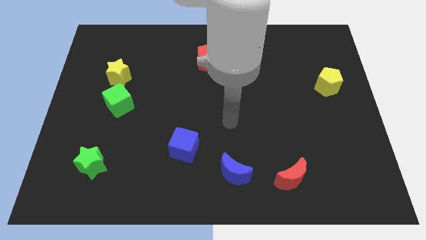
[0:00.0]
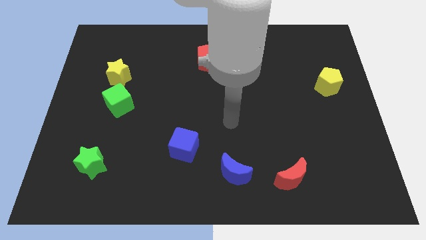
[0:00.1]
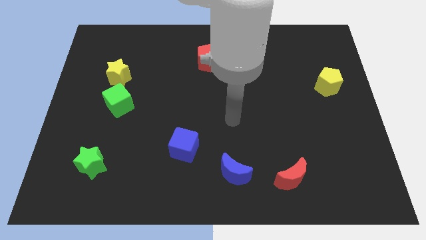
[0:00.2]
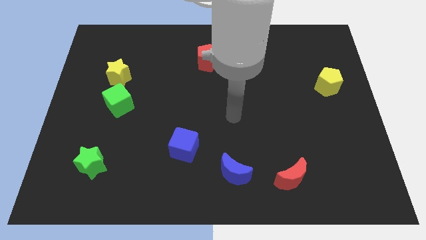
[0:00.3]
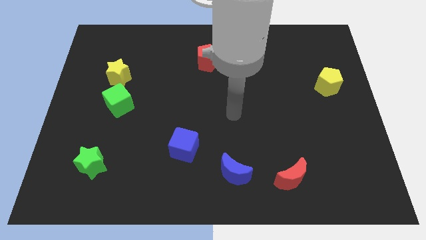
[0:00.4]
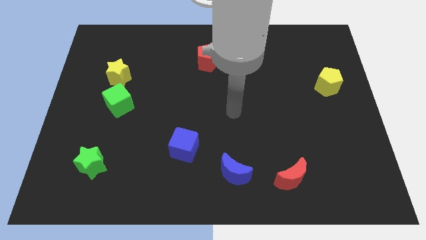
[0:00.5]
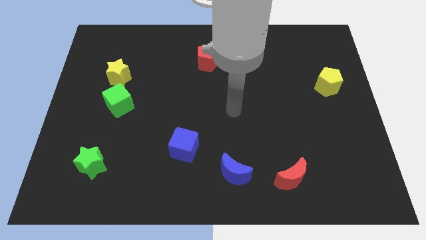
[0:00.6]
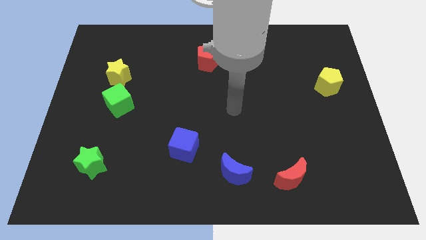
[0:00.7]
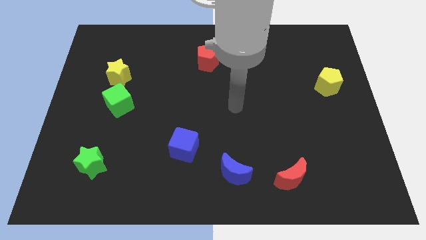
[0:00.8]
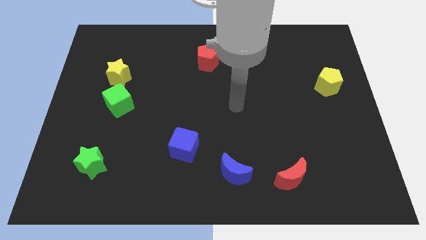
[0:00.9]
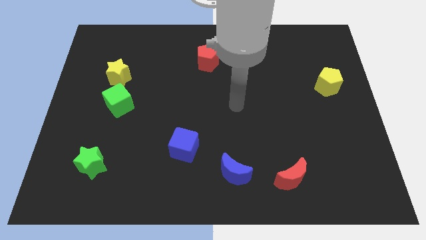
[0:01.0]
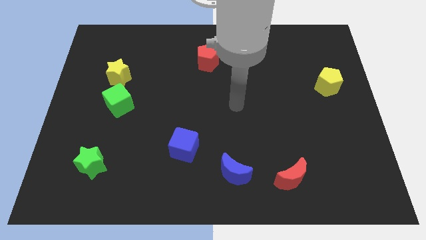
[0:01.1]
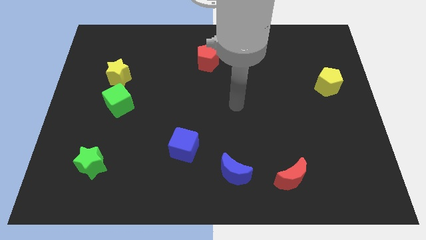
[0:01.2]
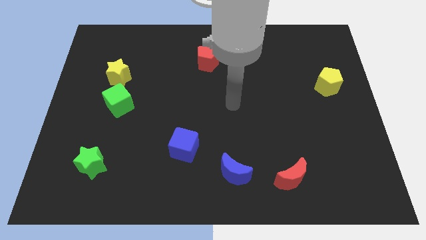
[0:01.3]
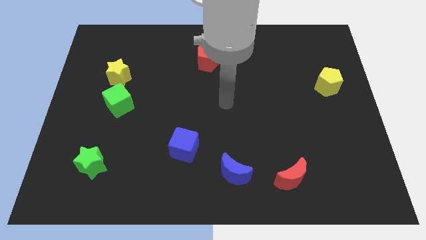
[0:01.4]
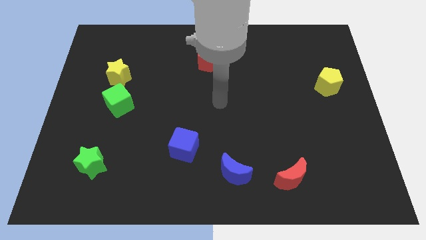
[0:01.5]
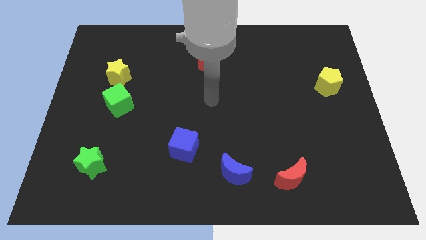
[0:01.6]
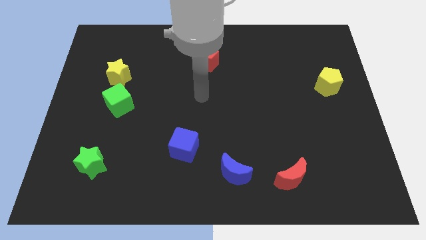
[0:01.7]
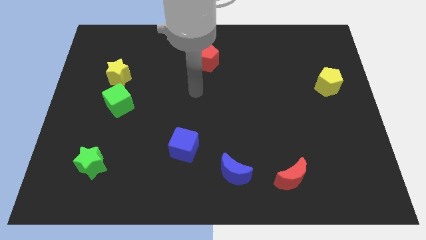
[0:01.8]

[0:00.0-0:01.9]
go and point your arm at the bottom side of the red pentagon

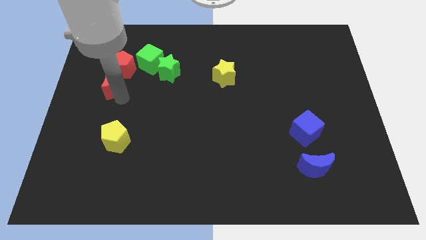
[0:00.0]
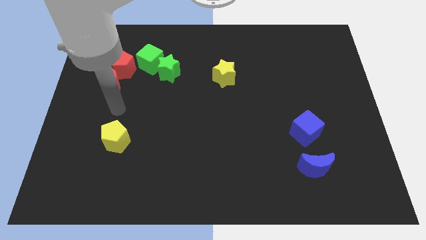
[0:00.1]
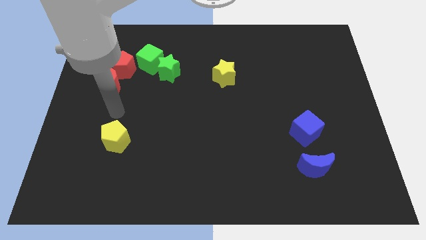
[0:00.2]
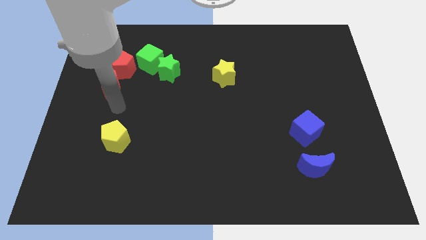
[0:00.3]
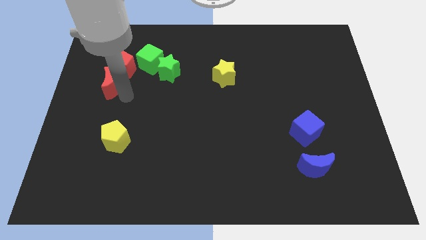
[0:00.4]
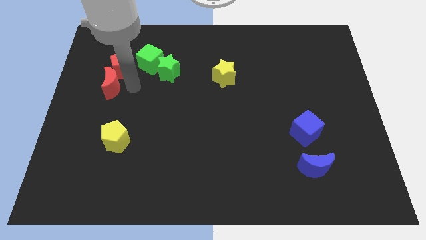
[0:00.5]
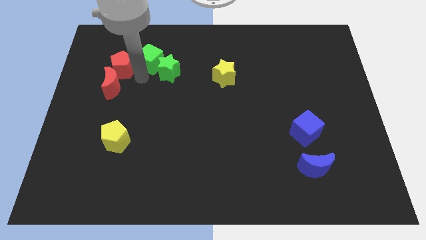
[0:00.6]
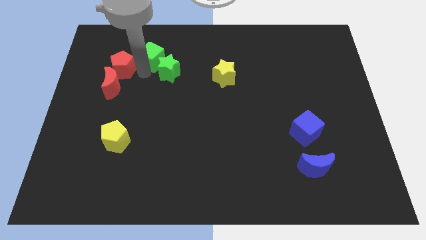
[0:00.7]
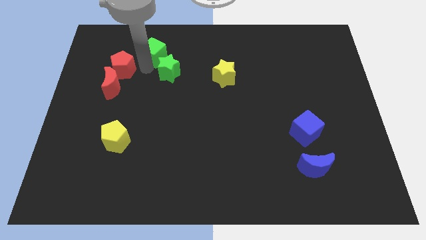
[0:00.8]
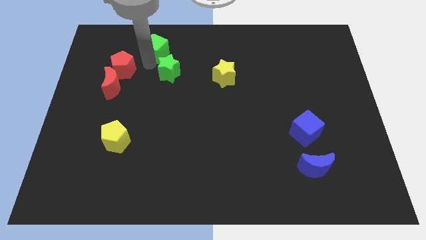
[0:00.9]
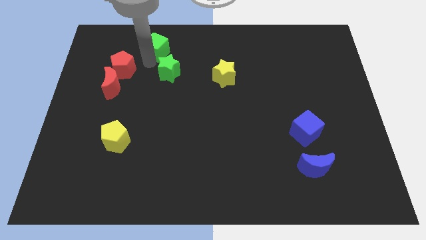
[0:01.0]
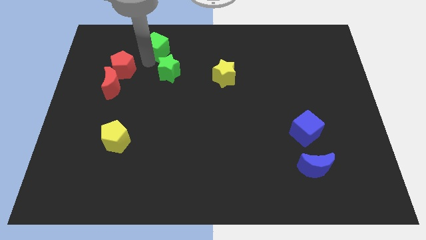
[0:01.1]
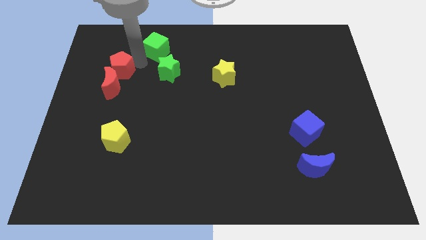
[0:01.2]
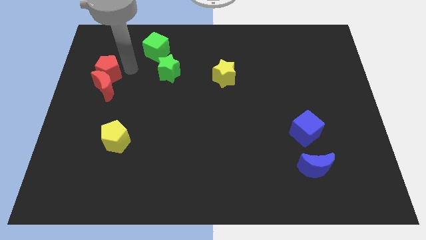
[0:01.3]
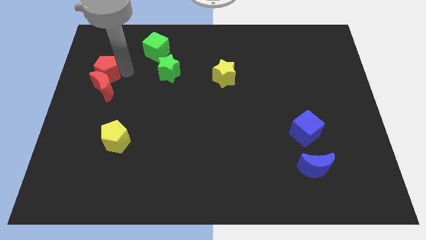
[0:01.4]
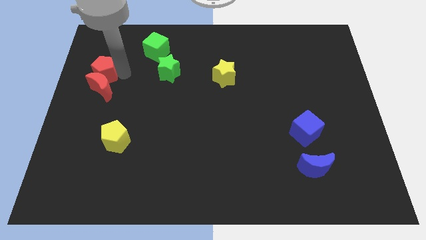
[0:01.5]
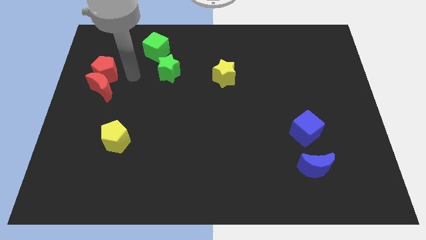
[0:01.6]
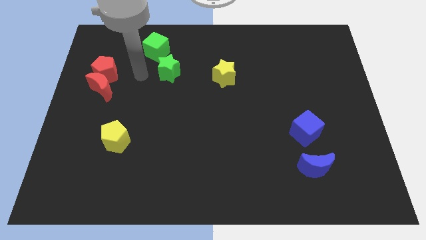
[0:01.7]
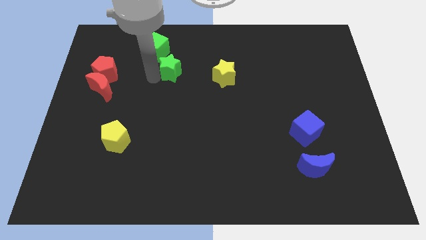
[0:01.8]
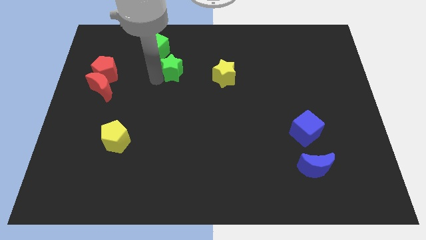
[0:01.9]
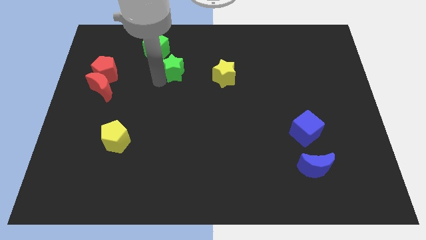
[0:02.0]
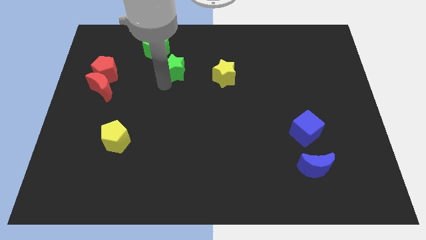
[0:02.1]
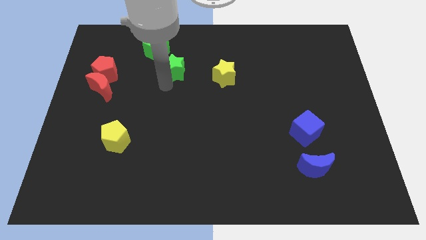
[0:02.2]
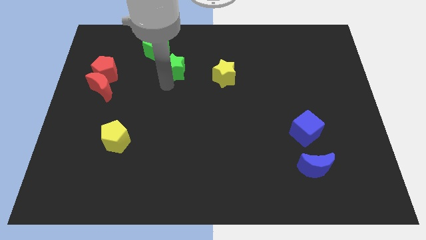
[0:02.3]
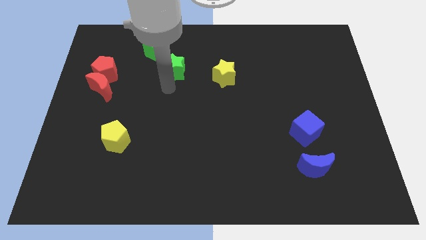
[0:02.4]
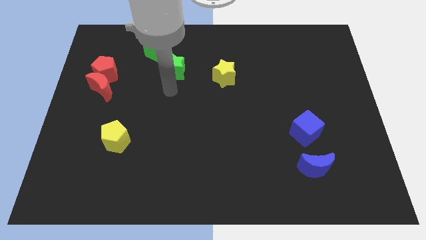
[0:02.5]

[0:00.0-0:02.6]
separate the green and red blocks

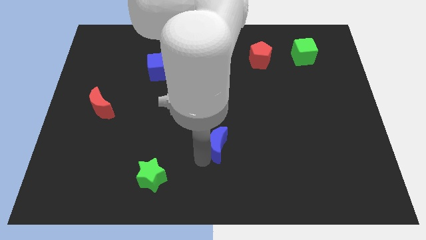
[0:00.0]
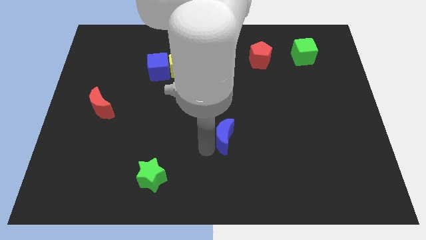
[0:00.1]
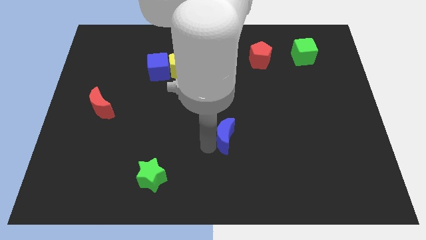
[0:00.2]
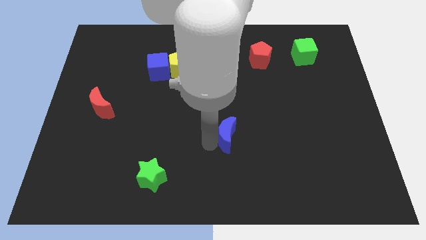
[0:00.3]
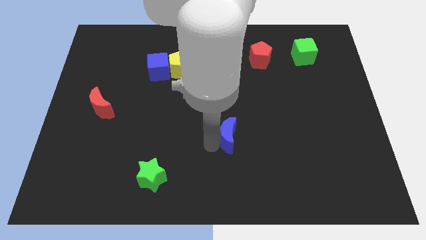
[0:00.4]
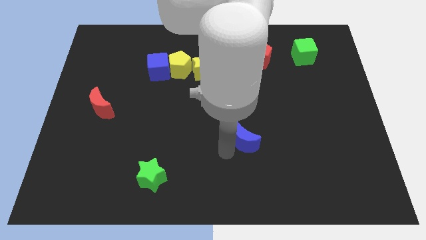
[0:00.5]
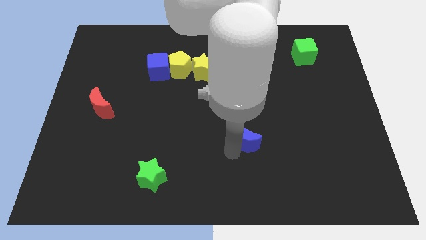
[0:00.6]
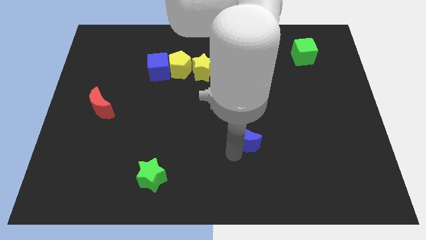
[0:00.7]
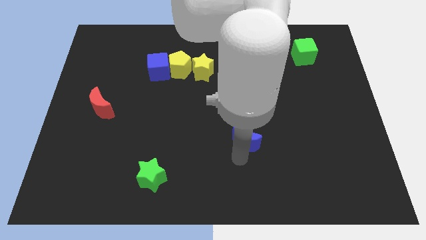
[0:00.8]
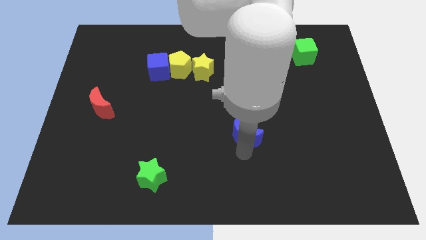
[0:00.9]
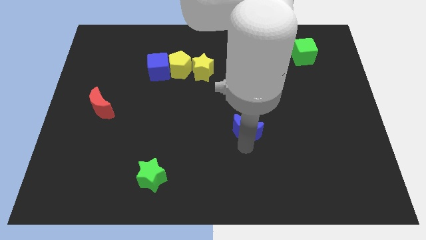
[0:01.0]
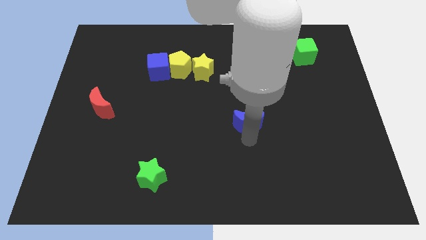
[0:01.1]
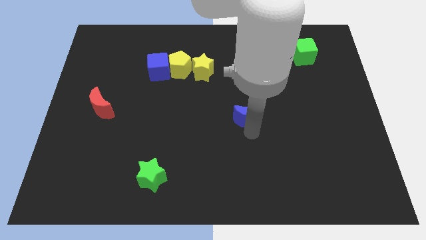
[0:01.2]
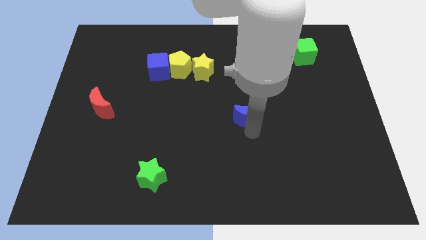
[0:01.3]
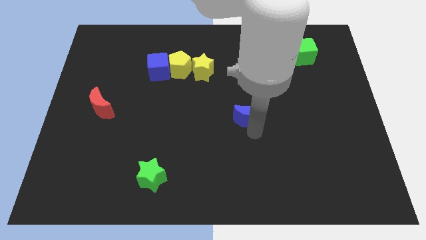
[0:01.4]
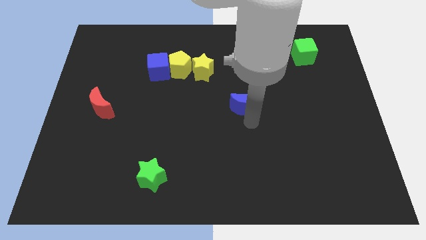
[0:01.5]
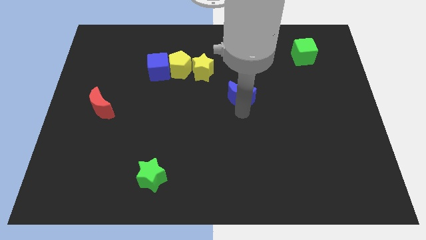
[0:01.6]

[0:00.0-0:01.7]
place the blue moon towards the center of the board

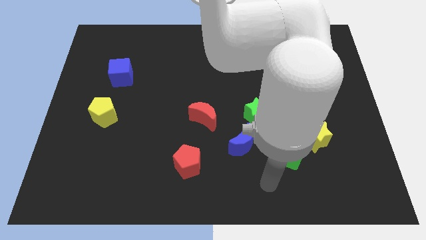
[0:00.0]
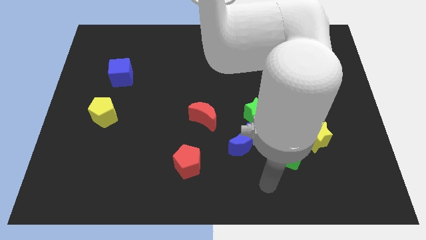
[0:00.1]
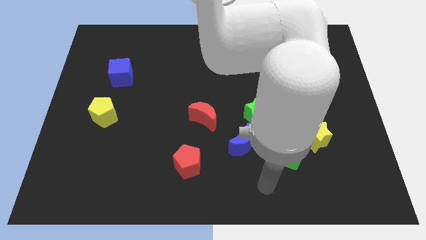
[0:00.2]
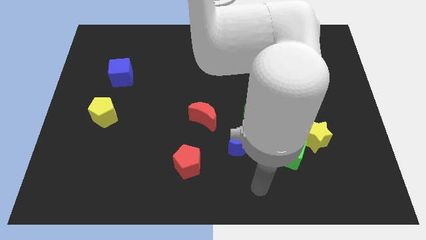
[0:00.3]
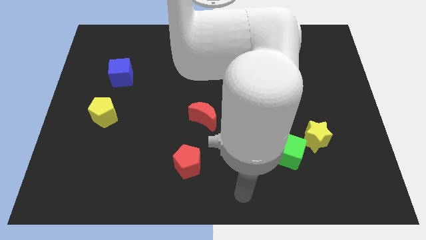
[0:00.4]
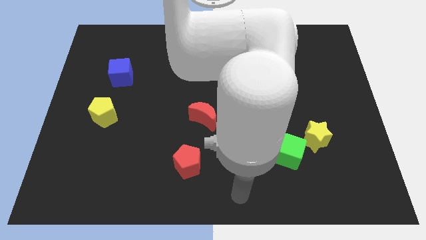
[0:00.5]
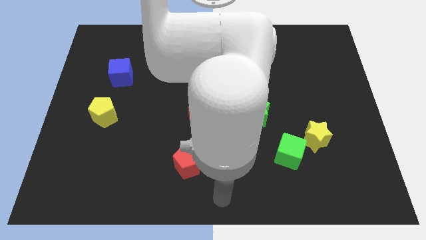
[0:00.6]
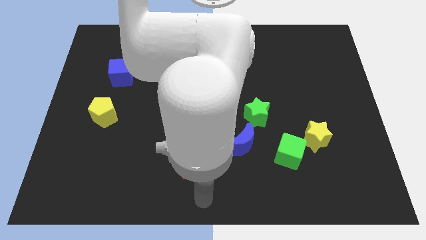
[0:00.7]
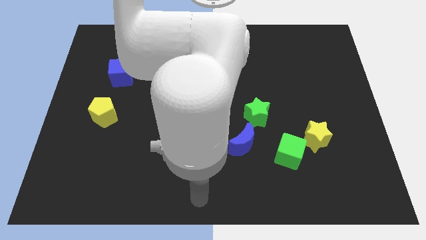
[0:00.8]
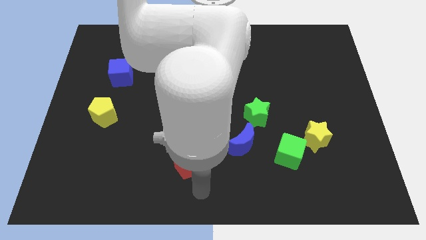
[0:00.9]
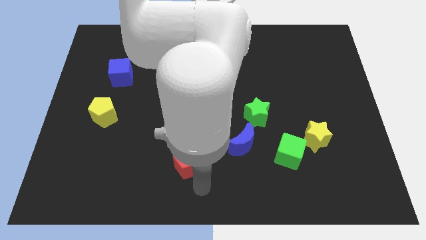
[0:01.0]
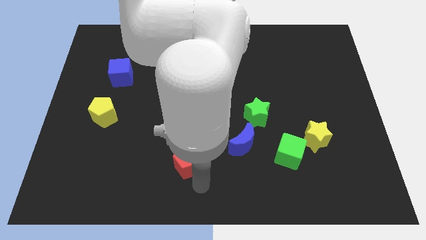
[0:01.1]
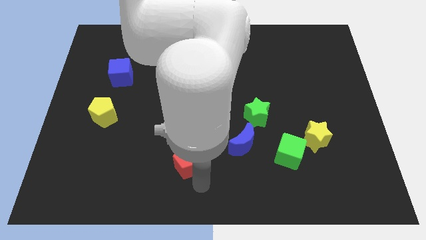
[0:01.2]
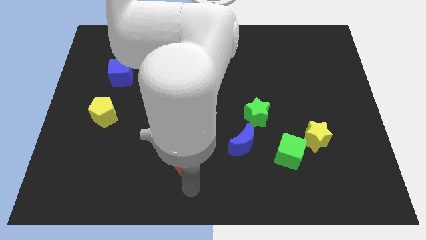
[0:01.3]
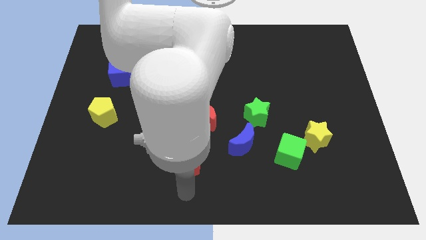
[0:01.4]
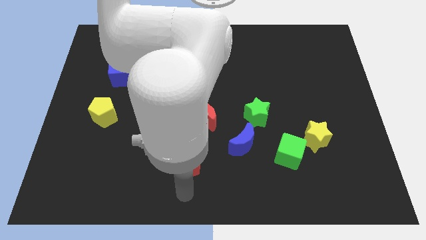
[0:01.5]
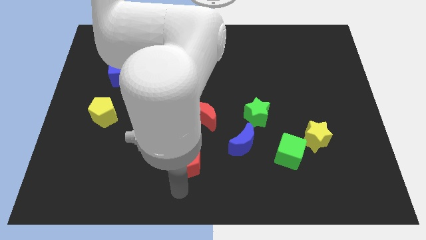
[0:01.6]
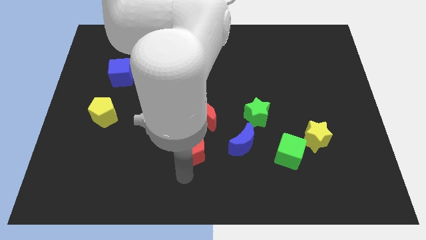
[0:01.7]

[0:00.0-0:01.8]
touch the red pentagon at the bottom

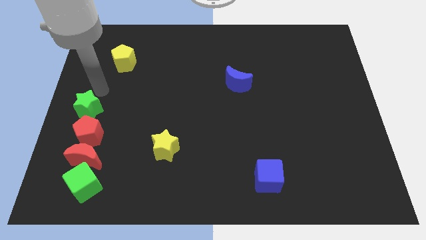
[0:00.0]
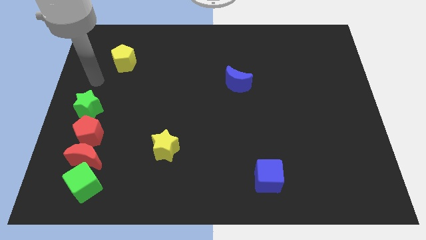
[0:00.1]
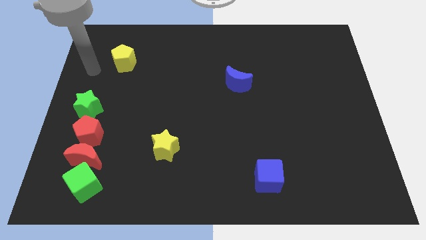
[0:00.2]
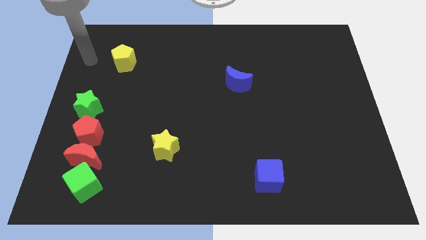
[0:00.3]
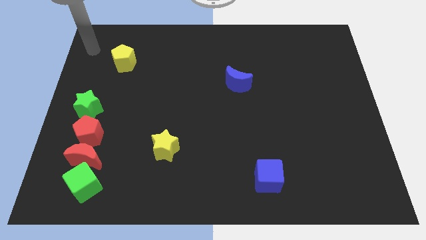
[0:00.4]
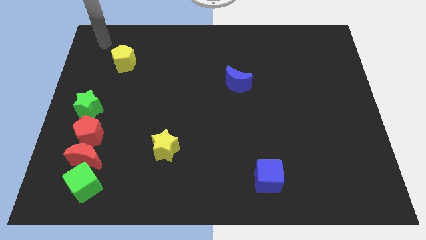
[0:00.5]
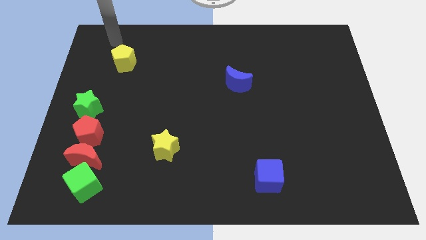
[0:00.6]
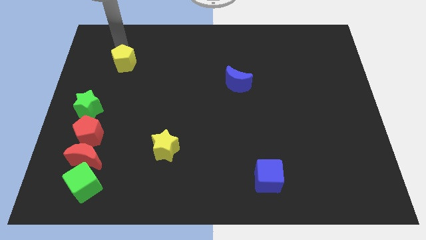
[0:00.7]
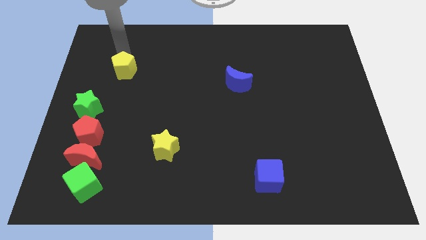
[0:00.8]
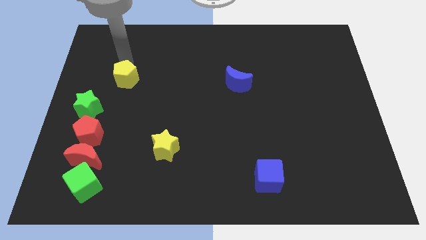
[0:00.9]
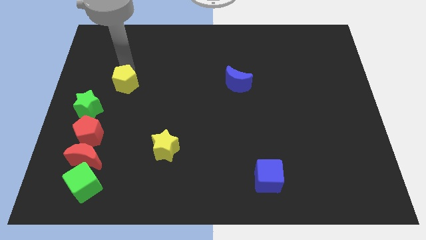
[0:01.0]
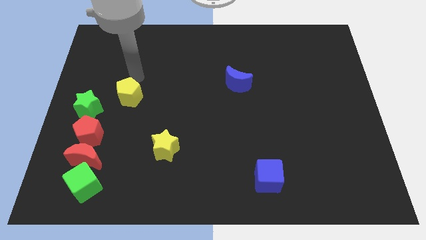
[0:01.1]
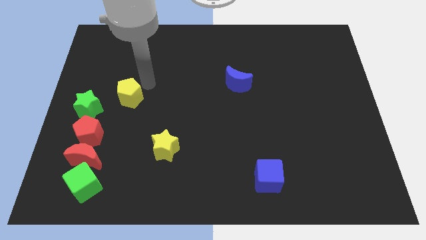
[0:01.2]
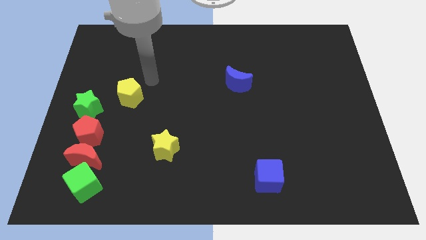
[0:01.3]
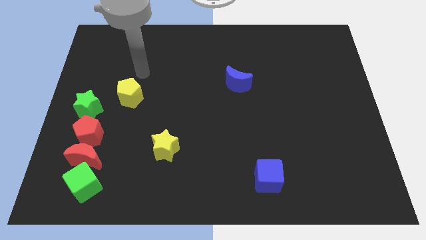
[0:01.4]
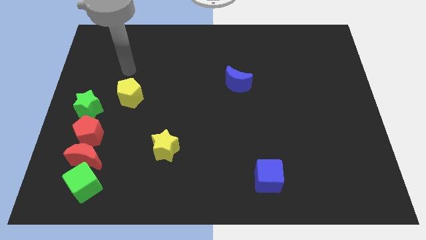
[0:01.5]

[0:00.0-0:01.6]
push the yellow pentagon slightly towards down
